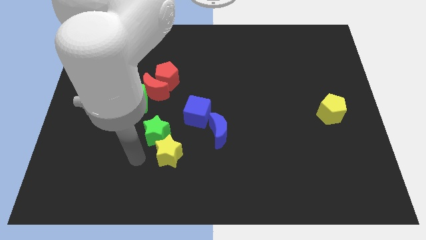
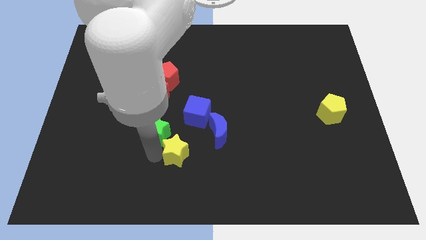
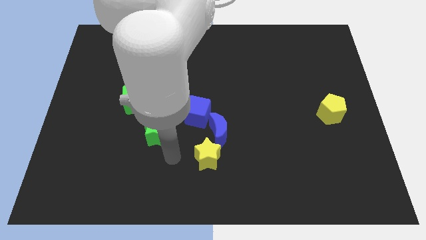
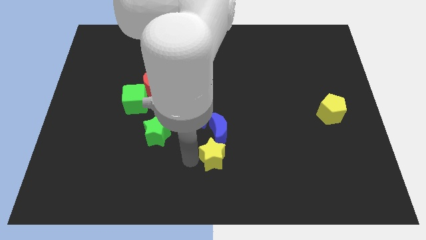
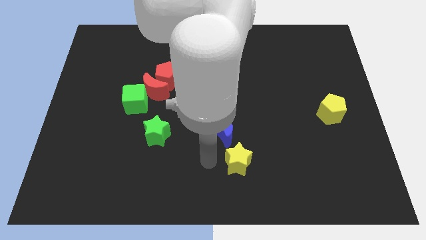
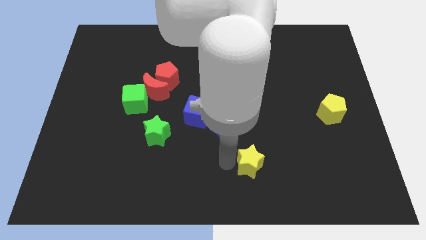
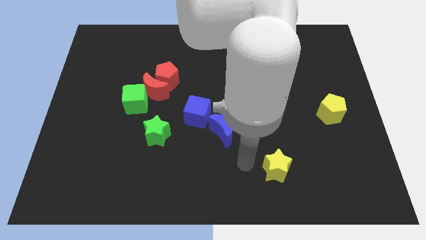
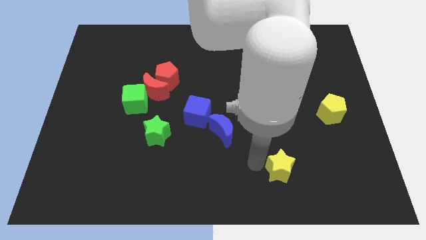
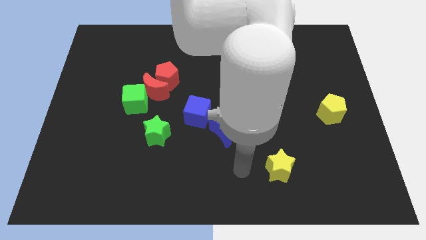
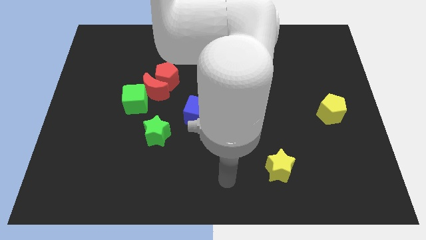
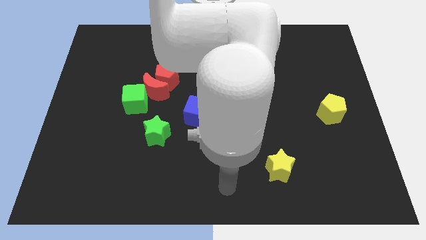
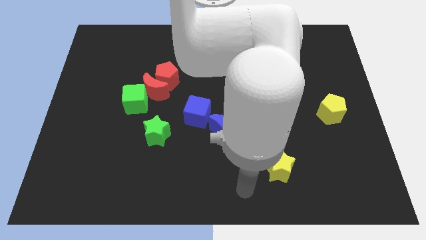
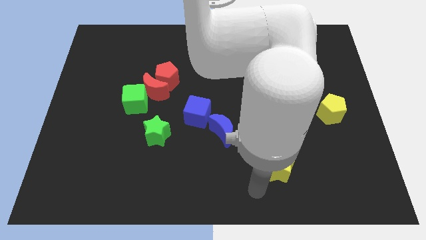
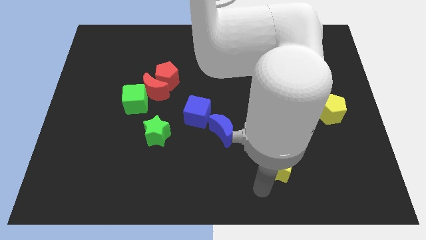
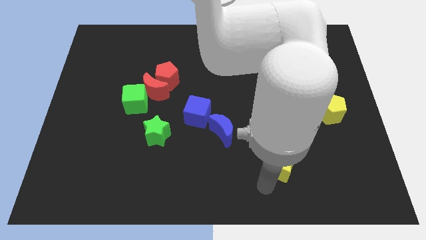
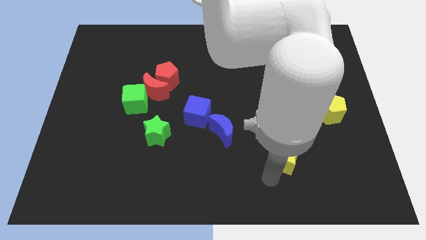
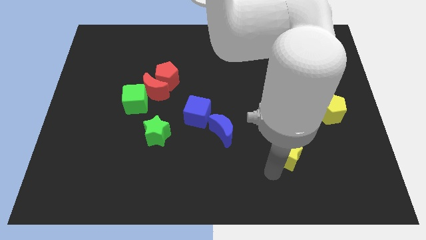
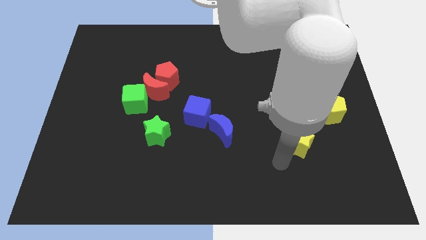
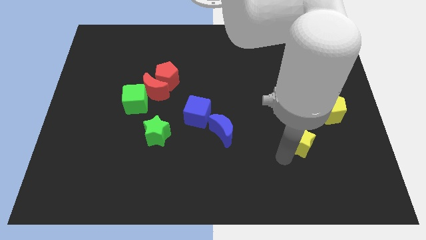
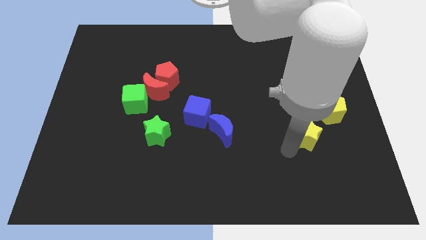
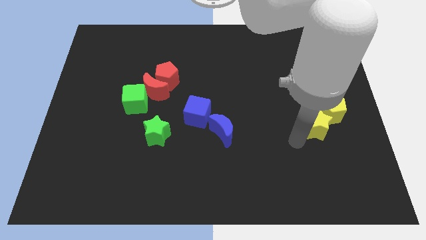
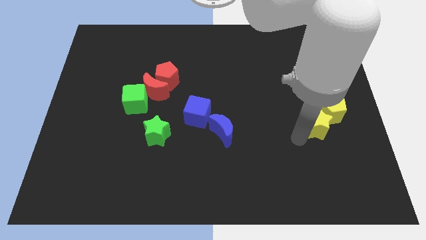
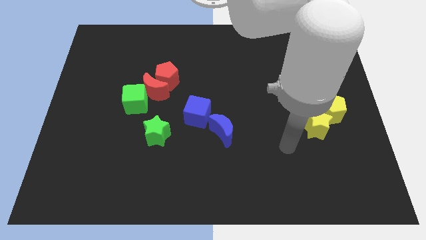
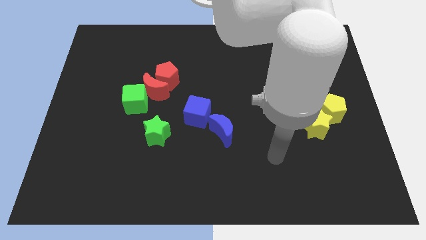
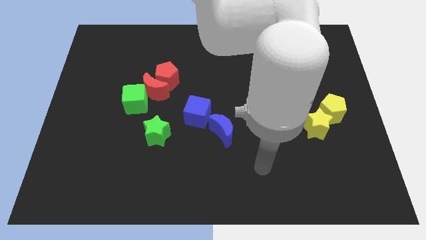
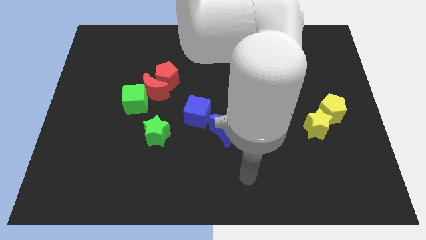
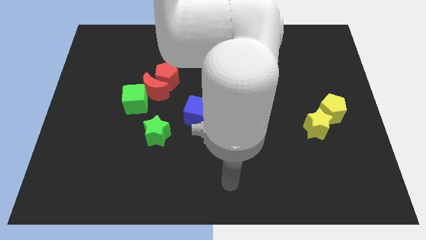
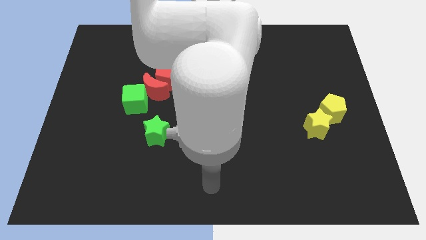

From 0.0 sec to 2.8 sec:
push the yellow star to the bottom left of the yellow pentagon

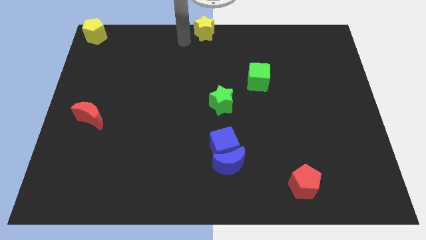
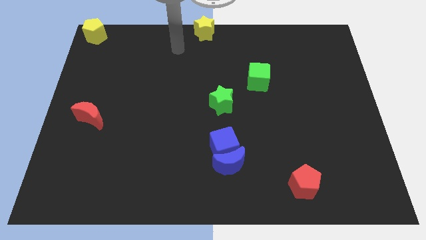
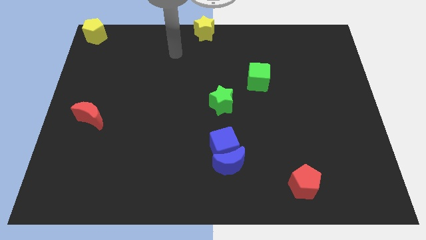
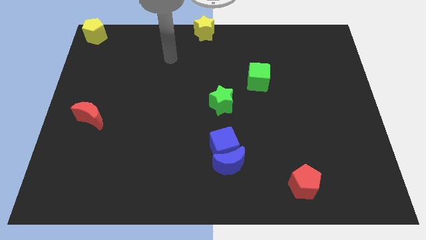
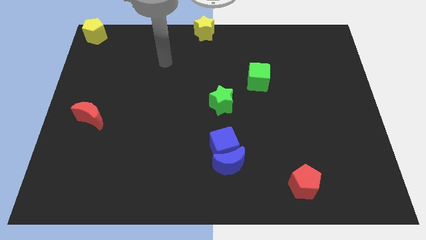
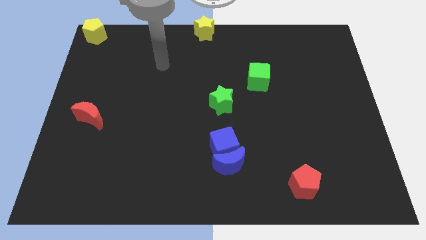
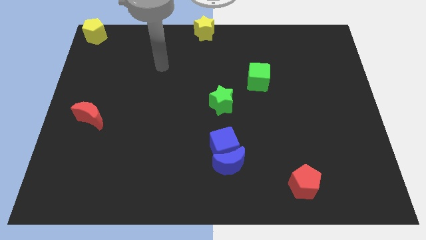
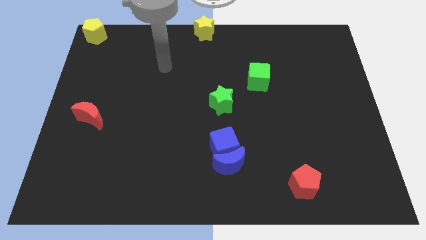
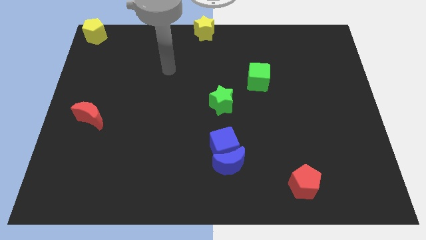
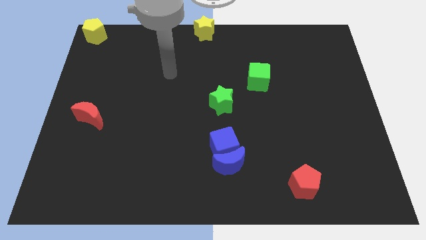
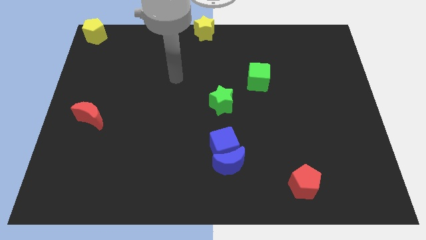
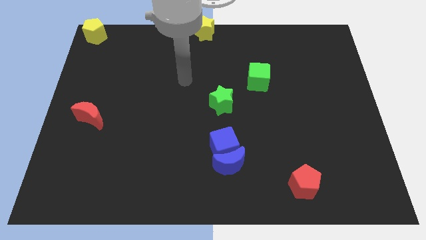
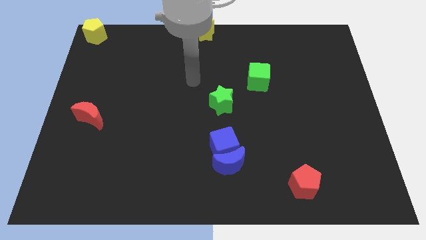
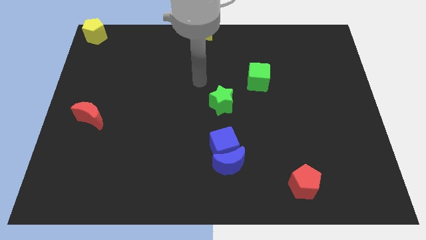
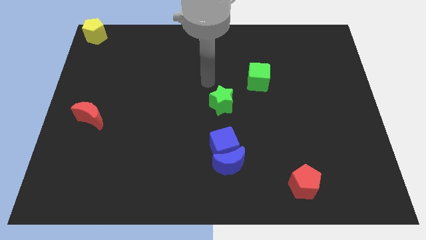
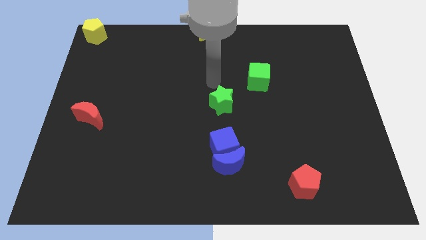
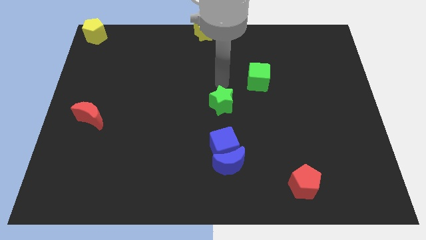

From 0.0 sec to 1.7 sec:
point the arm above the green star

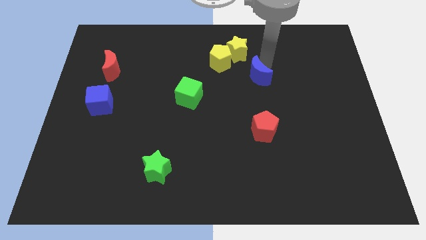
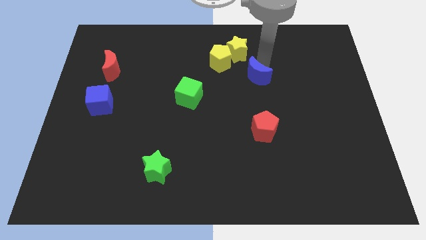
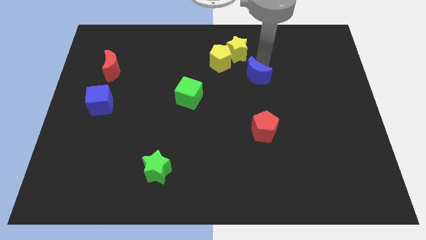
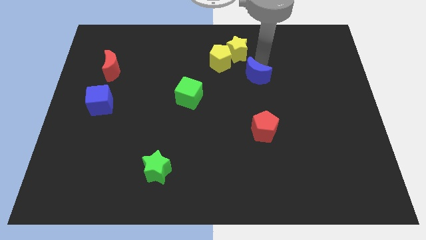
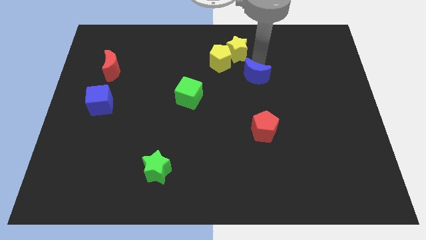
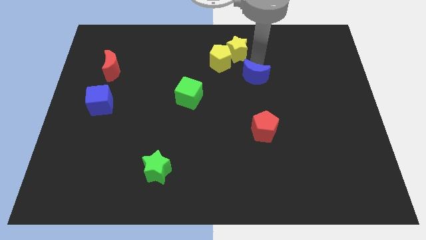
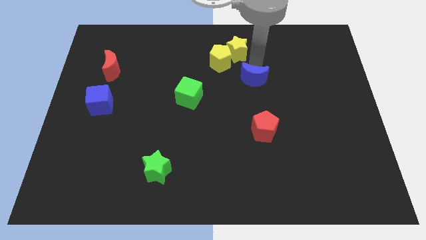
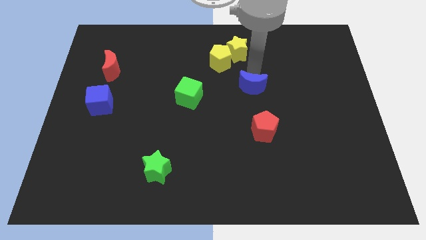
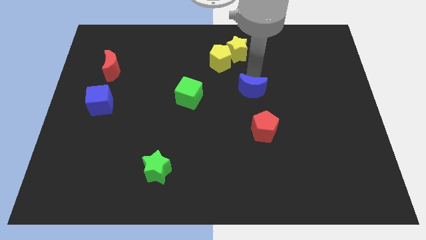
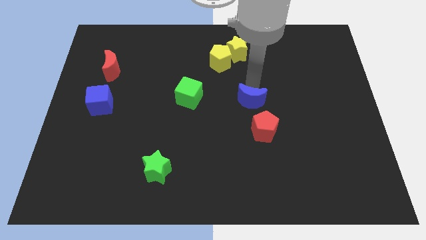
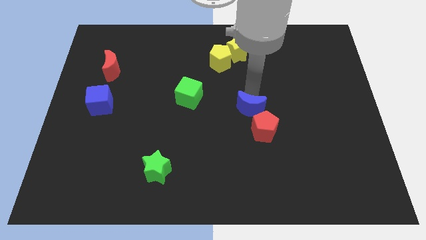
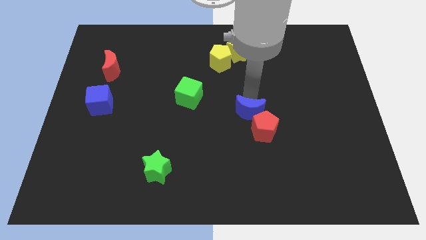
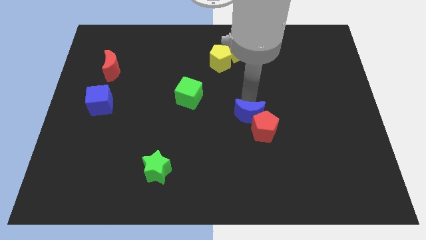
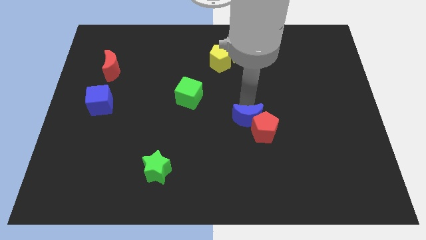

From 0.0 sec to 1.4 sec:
push blue moon towards red pentagon

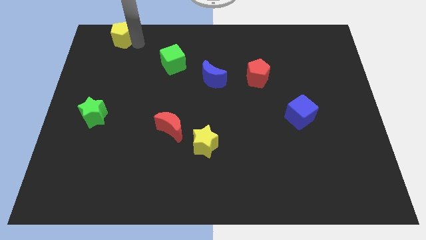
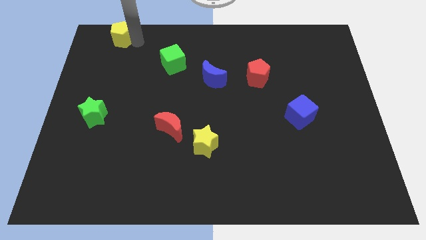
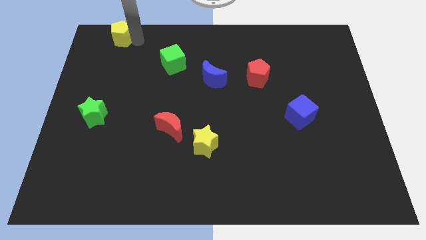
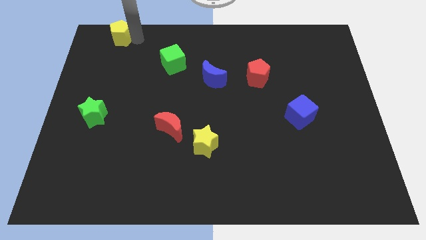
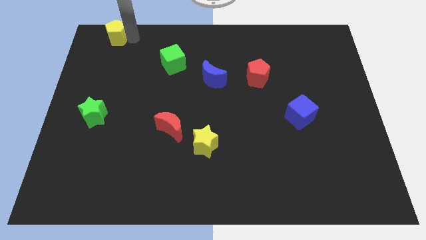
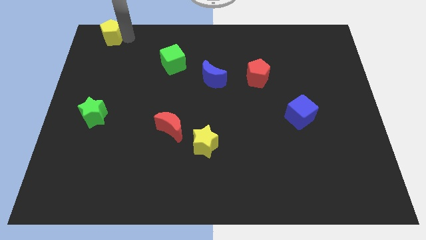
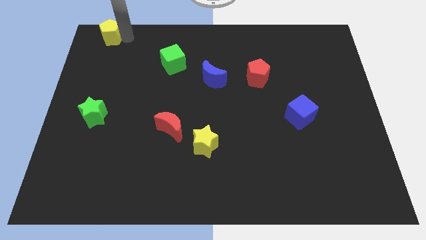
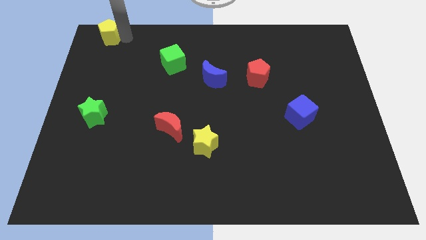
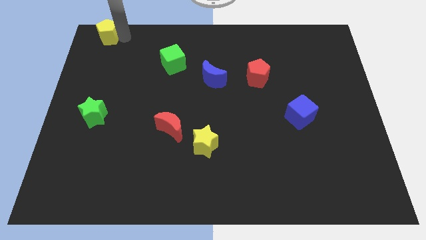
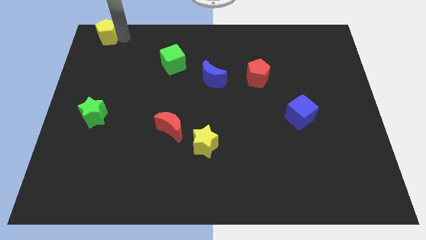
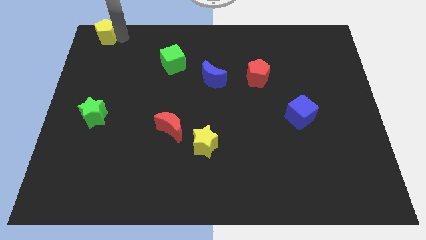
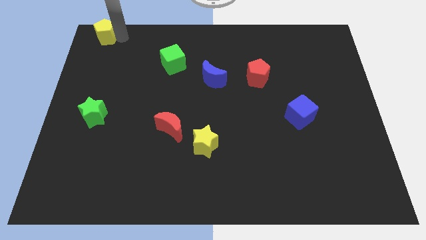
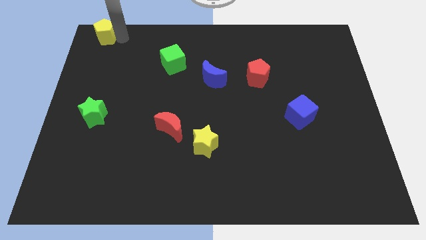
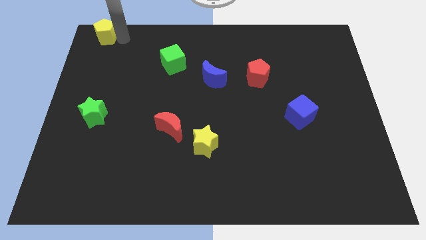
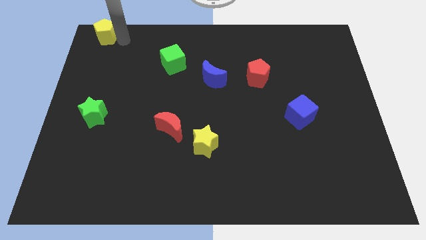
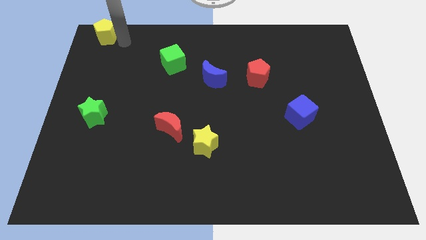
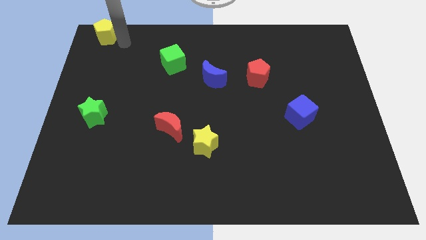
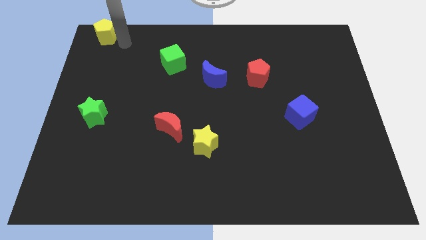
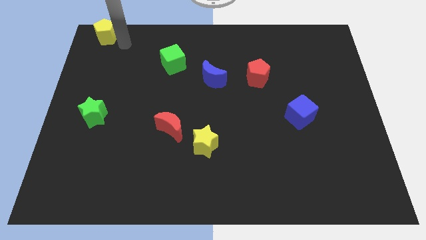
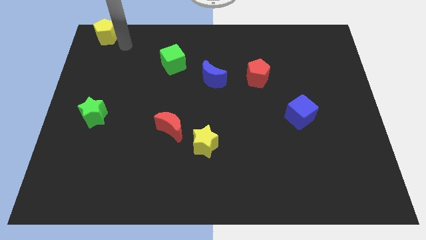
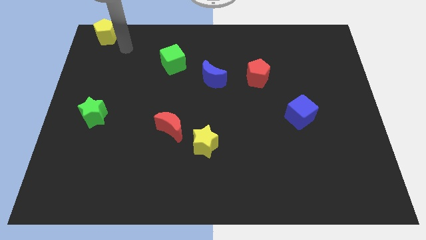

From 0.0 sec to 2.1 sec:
move the yellow pentagon towards the top left corner of the board

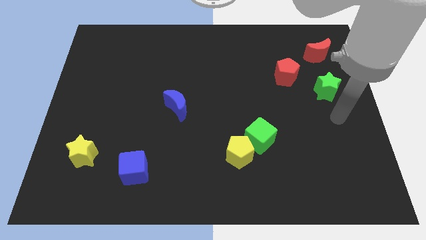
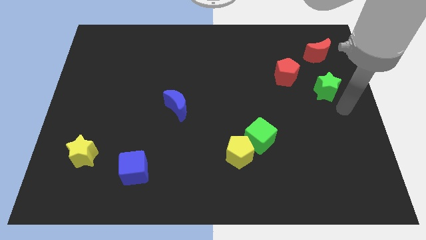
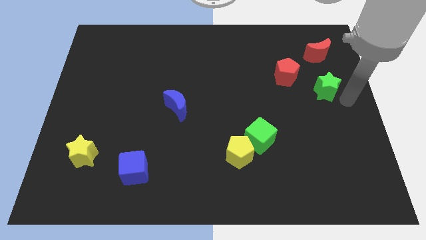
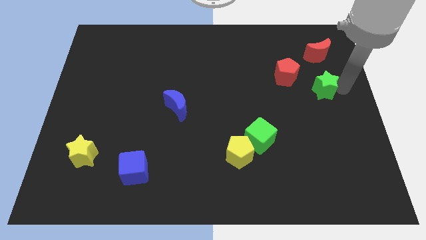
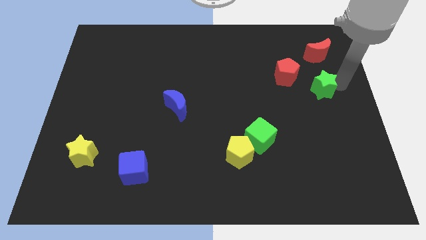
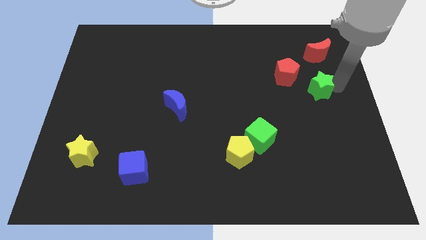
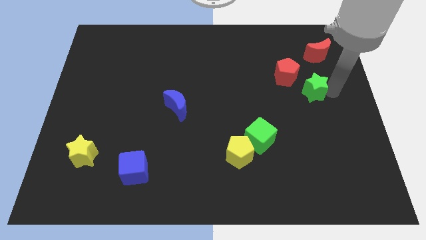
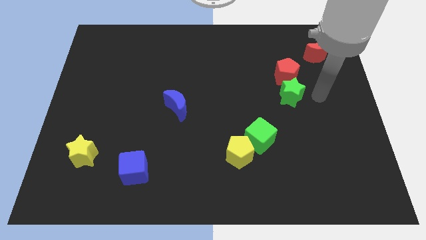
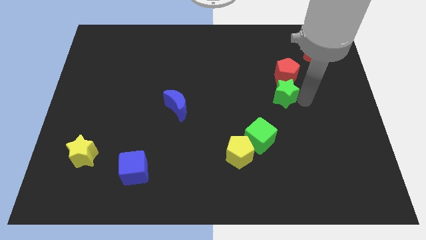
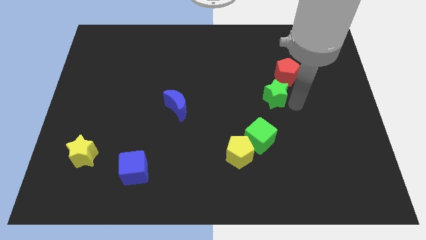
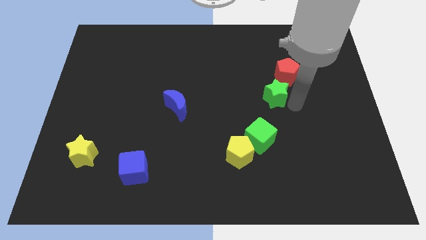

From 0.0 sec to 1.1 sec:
place the green star in between the green cube and red pentagon
